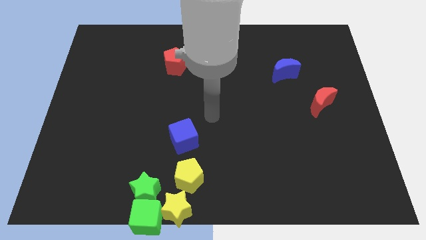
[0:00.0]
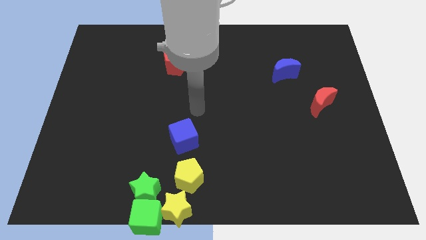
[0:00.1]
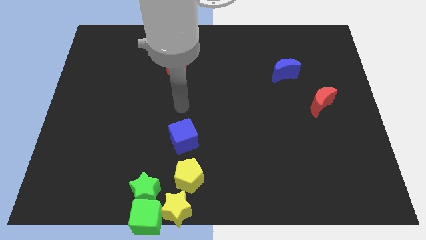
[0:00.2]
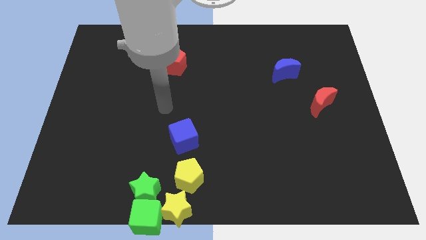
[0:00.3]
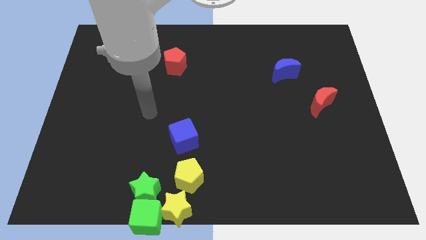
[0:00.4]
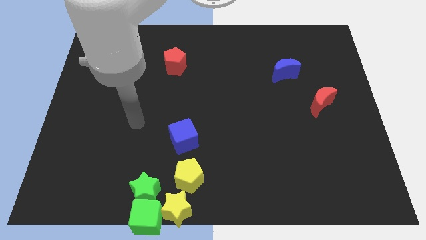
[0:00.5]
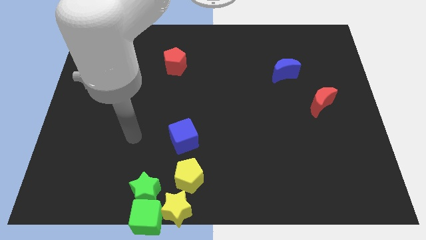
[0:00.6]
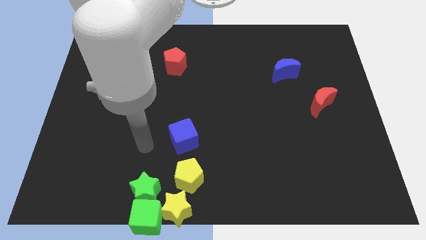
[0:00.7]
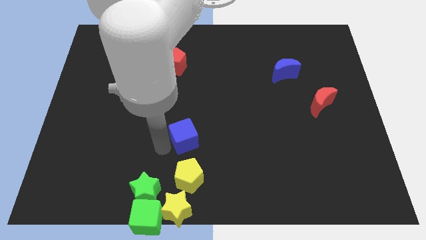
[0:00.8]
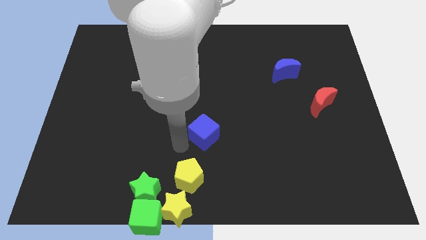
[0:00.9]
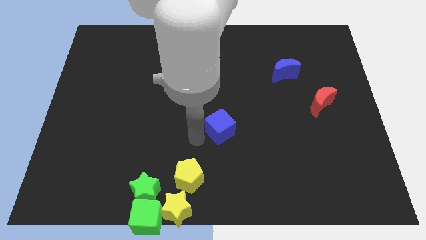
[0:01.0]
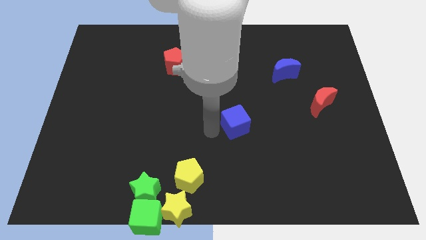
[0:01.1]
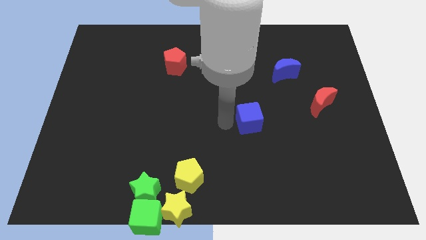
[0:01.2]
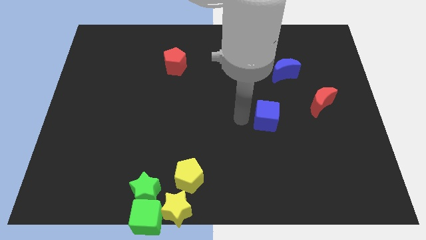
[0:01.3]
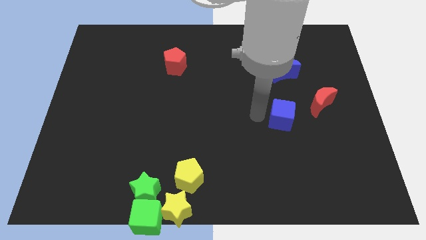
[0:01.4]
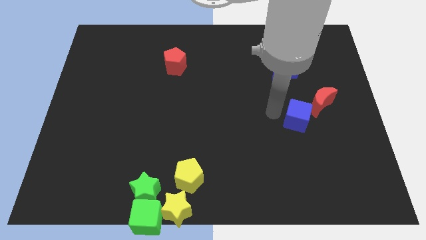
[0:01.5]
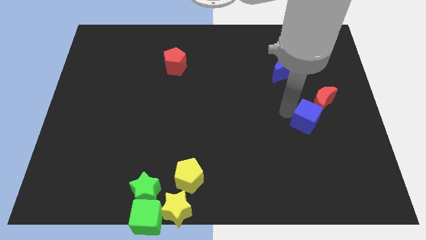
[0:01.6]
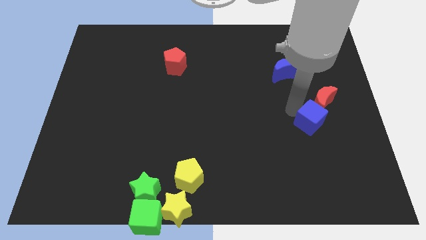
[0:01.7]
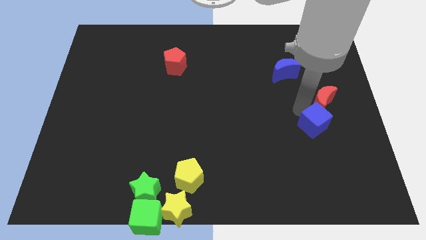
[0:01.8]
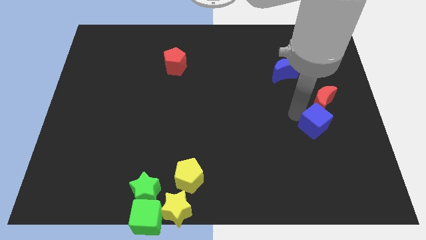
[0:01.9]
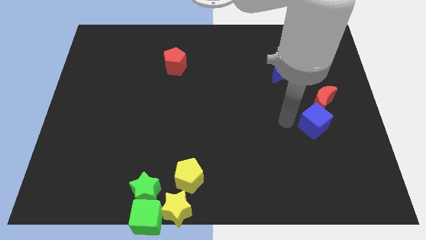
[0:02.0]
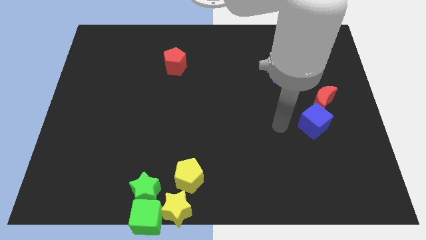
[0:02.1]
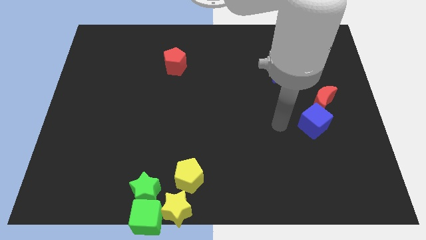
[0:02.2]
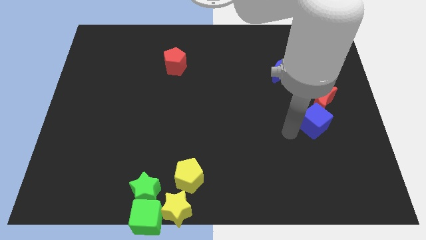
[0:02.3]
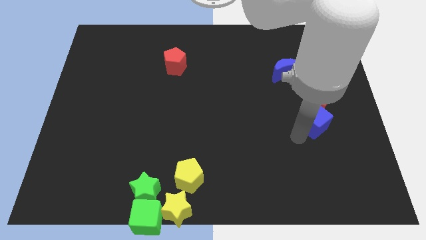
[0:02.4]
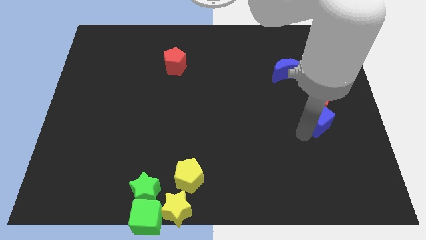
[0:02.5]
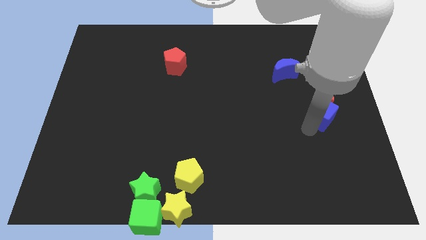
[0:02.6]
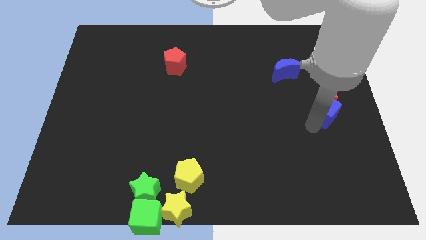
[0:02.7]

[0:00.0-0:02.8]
move the blue cube into the red crescent

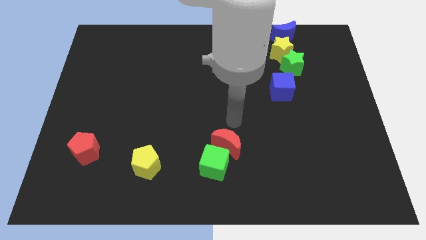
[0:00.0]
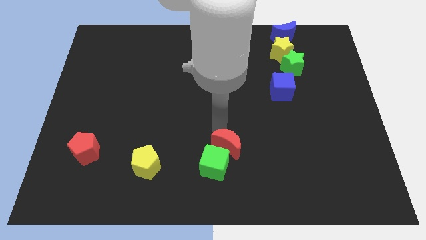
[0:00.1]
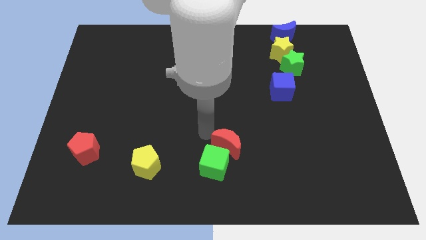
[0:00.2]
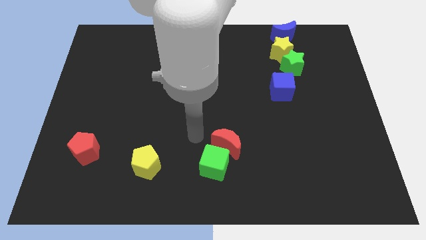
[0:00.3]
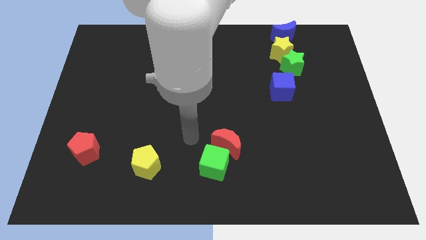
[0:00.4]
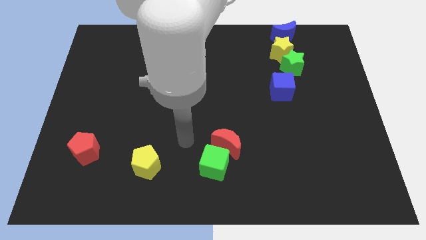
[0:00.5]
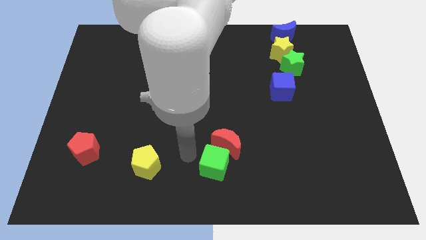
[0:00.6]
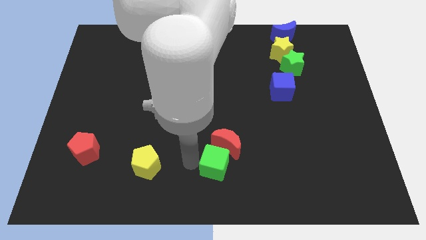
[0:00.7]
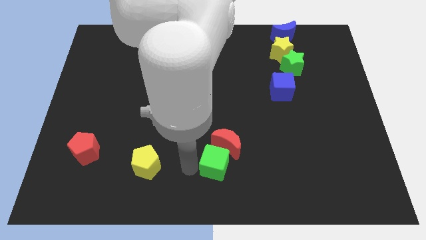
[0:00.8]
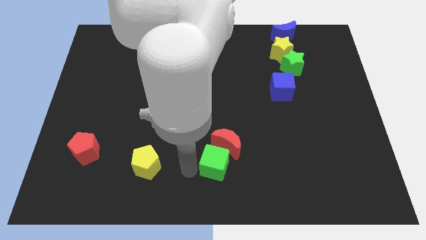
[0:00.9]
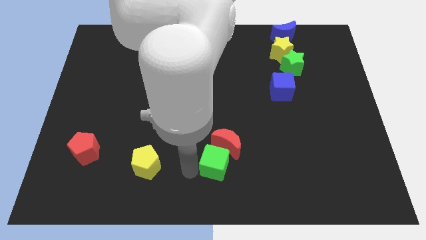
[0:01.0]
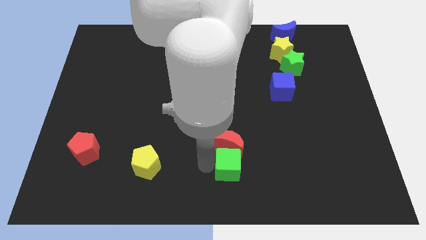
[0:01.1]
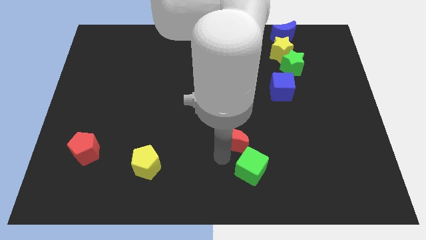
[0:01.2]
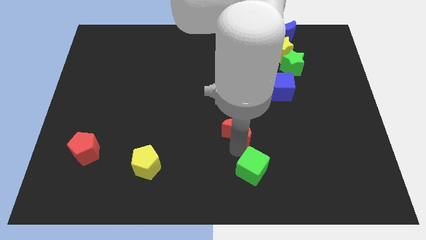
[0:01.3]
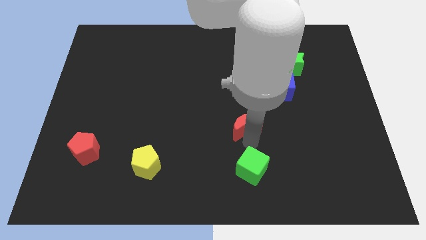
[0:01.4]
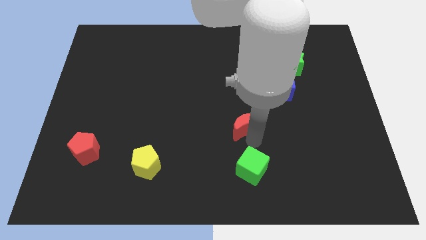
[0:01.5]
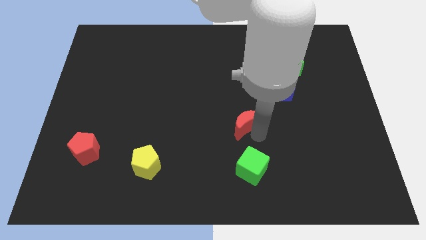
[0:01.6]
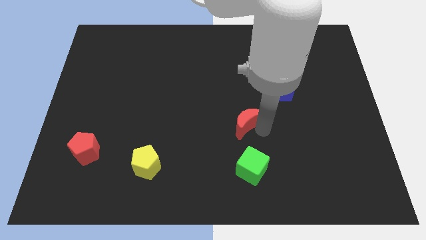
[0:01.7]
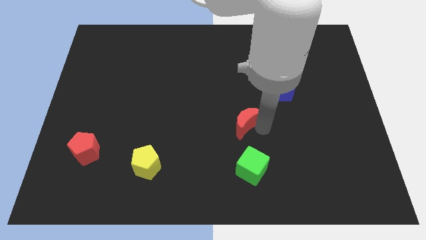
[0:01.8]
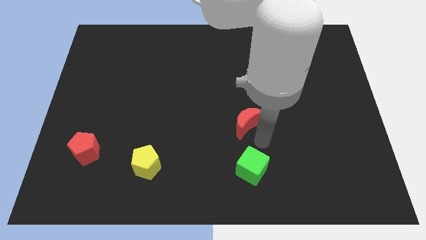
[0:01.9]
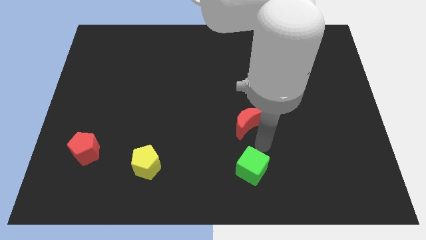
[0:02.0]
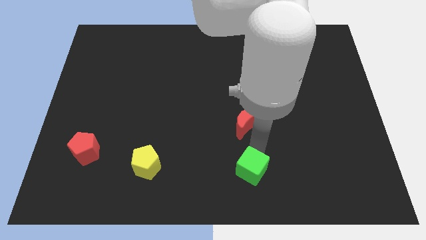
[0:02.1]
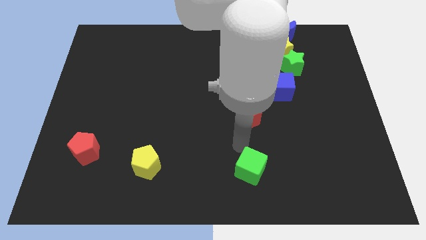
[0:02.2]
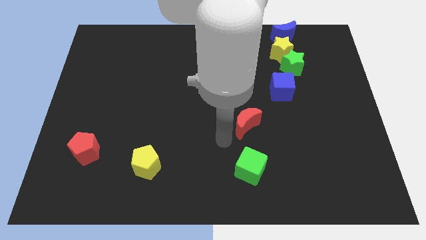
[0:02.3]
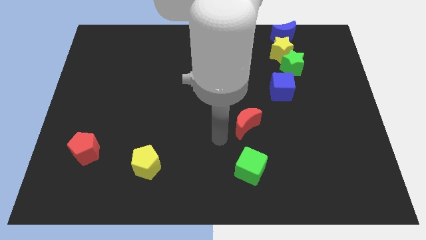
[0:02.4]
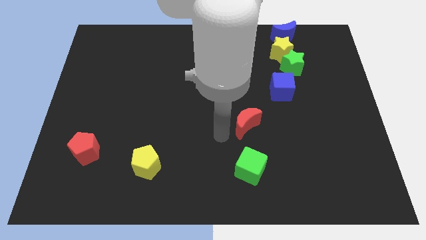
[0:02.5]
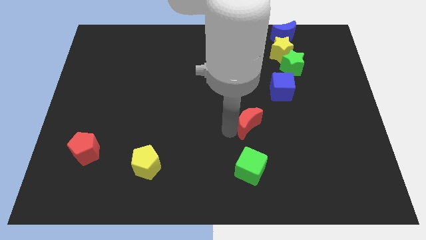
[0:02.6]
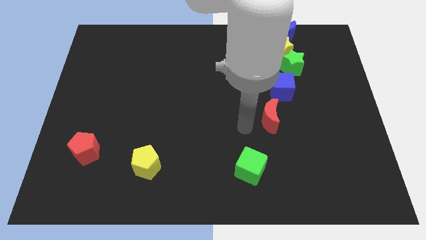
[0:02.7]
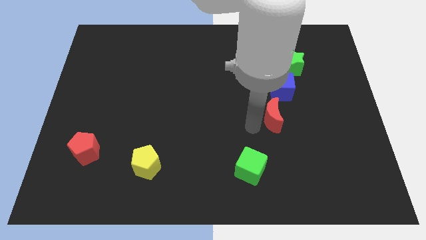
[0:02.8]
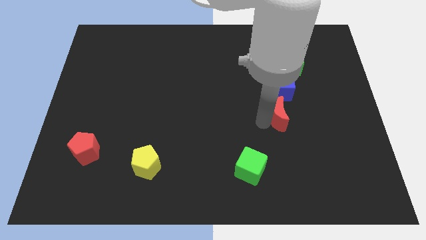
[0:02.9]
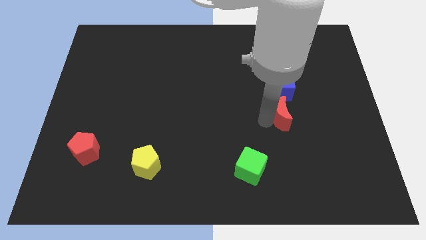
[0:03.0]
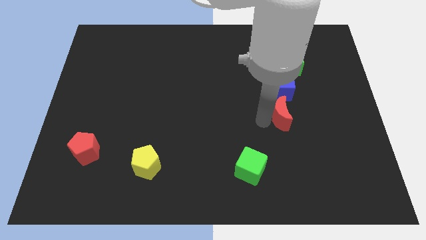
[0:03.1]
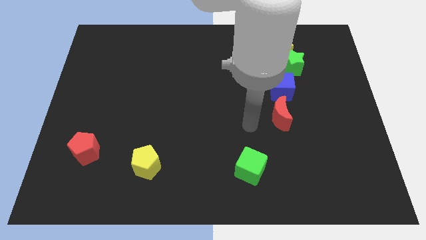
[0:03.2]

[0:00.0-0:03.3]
move red moon below the blue cube

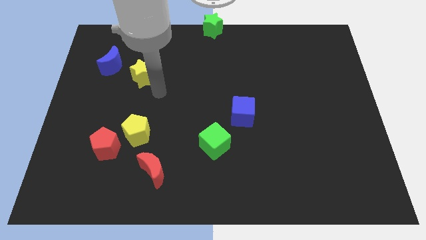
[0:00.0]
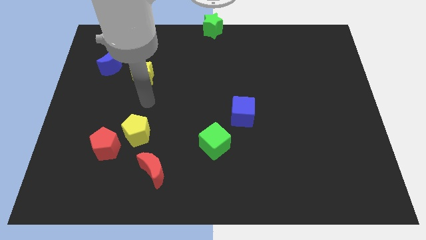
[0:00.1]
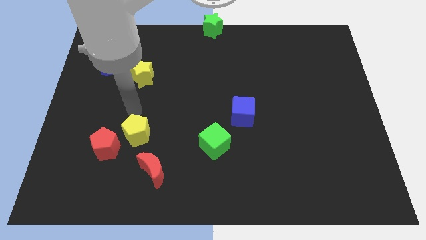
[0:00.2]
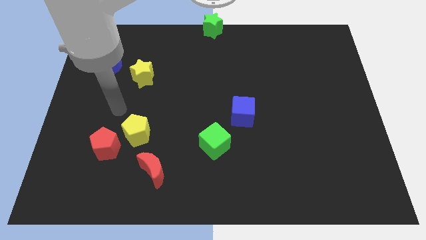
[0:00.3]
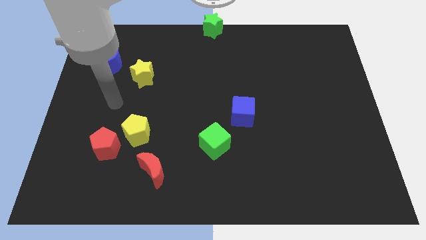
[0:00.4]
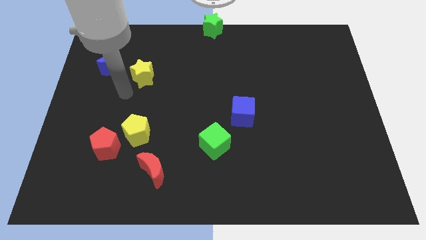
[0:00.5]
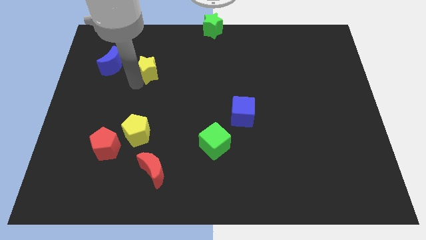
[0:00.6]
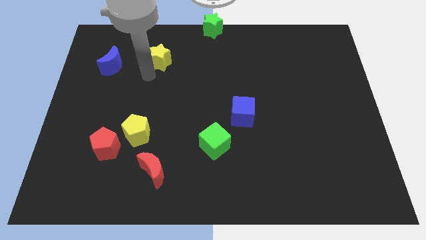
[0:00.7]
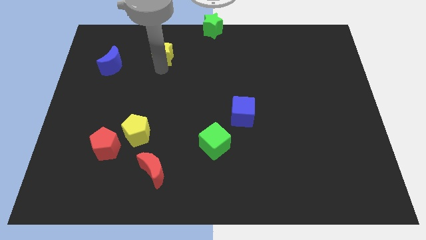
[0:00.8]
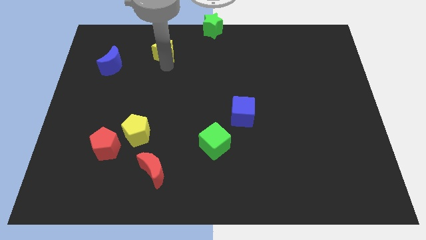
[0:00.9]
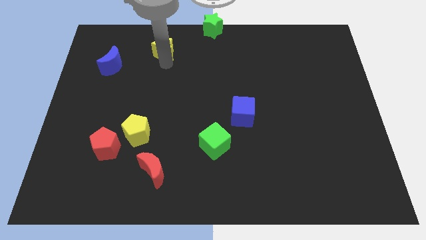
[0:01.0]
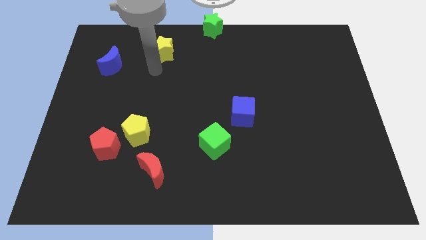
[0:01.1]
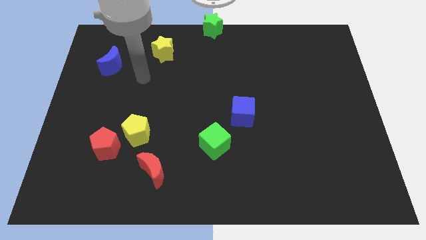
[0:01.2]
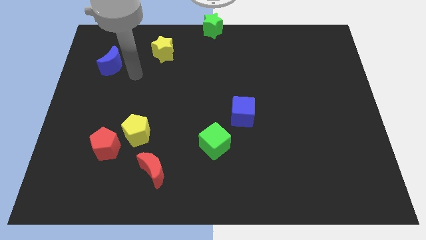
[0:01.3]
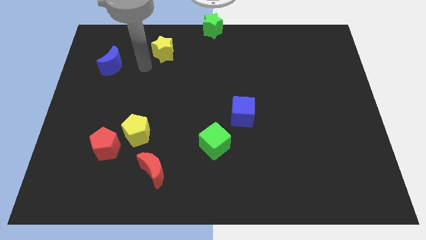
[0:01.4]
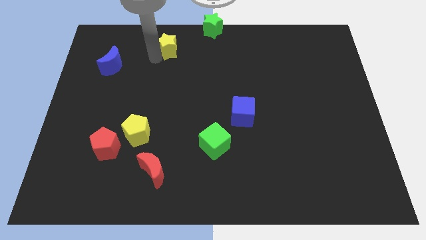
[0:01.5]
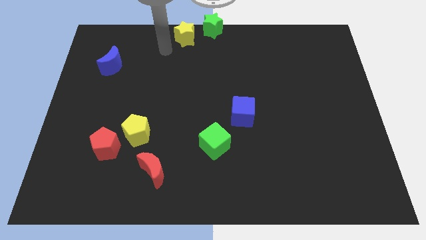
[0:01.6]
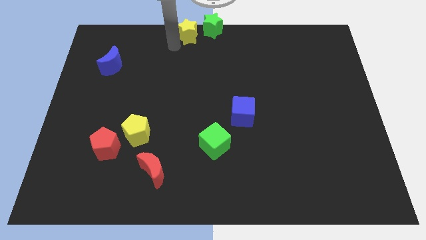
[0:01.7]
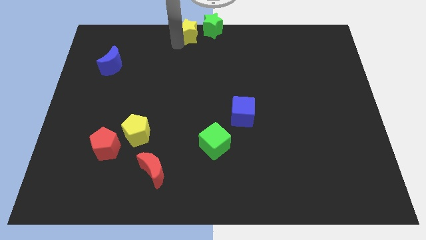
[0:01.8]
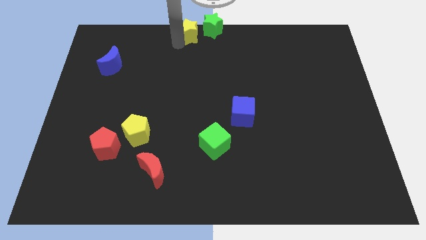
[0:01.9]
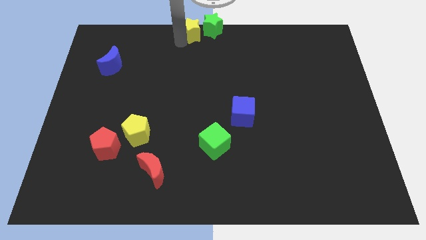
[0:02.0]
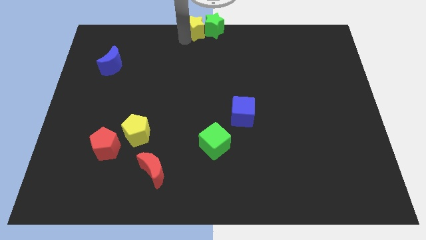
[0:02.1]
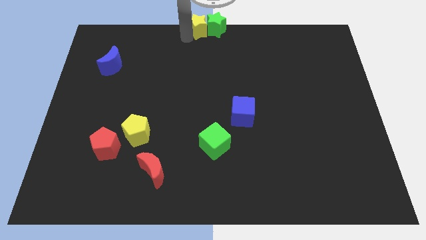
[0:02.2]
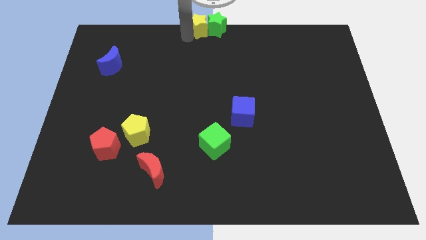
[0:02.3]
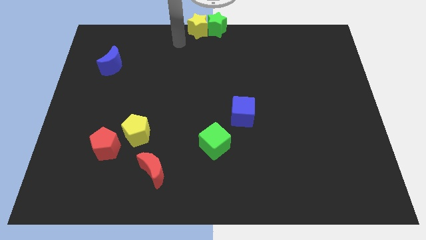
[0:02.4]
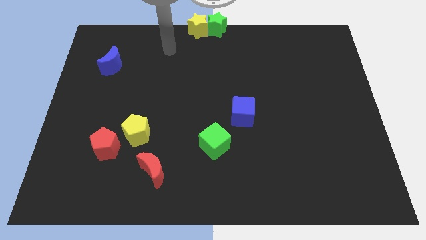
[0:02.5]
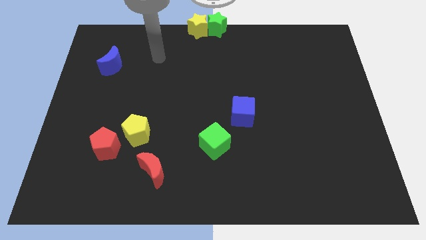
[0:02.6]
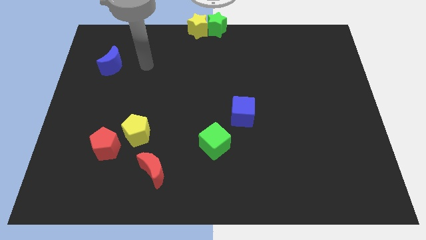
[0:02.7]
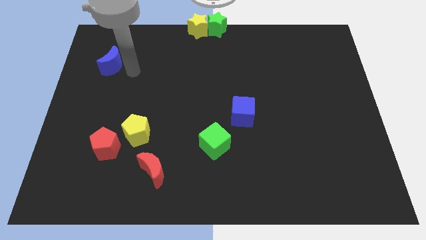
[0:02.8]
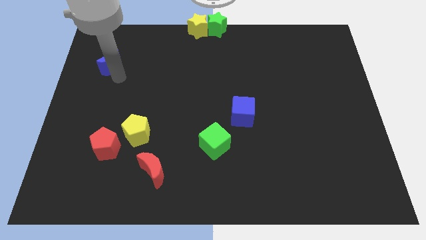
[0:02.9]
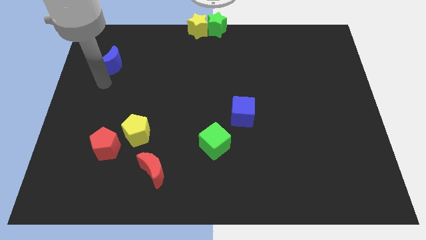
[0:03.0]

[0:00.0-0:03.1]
move yellow star close to the green star middle of the board
